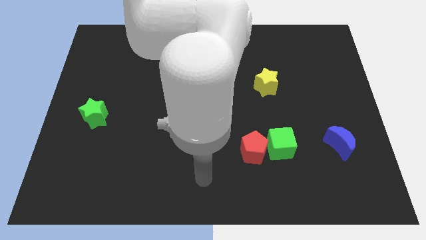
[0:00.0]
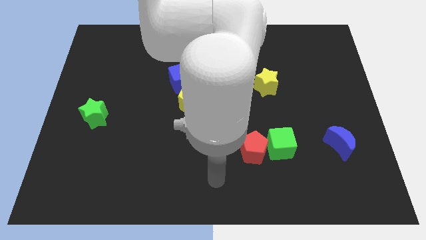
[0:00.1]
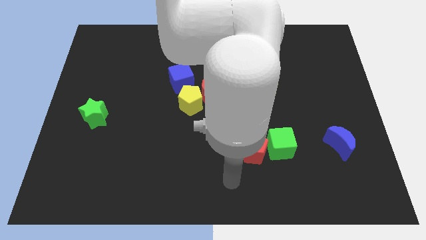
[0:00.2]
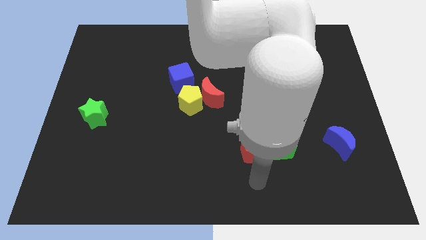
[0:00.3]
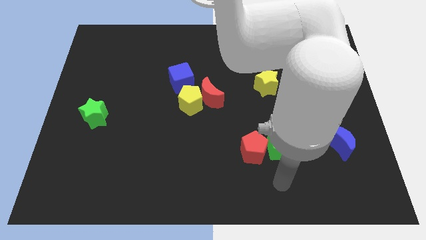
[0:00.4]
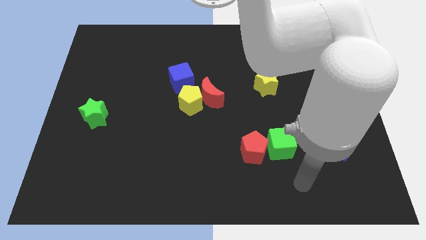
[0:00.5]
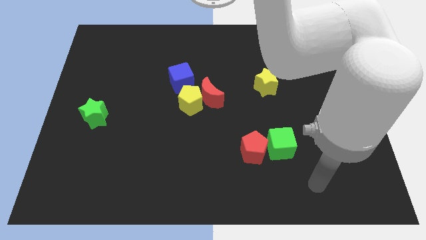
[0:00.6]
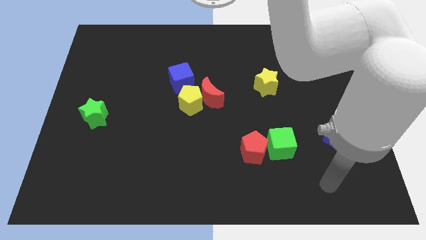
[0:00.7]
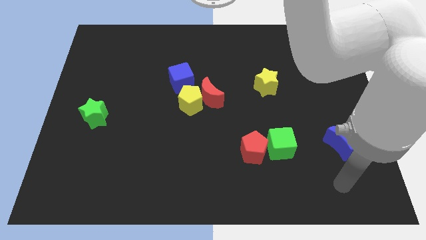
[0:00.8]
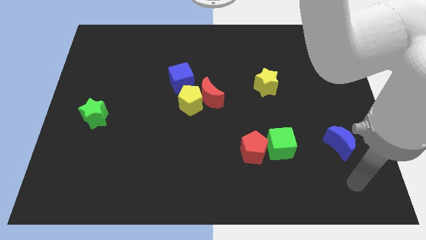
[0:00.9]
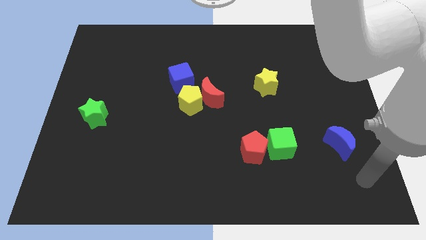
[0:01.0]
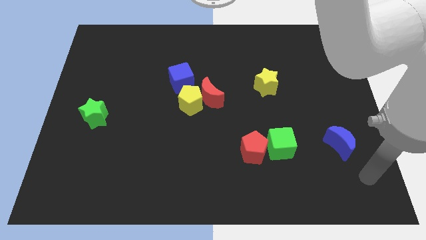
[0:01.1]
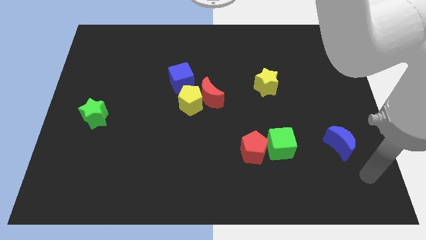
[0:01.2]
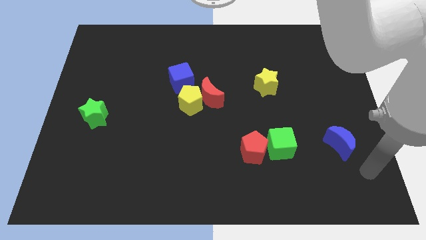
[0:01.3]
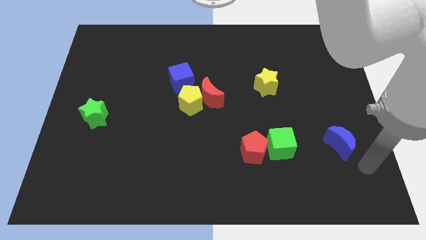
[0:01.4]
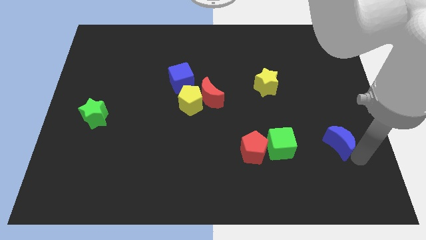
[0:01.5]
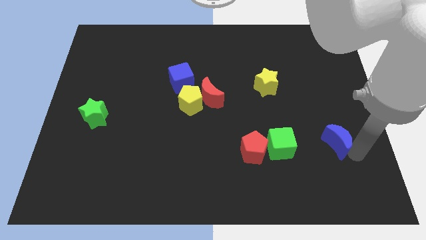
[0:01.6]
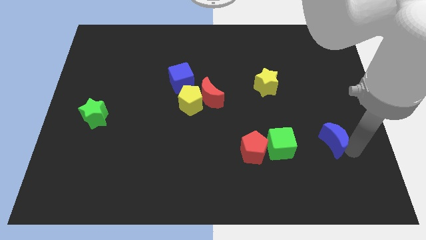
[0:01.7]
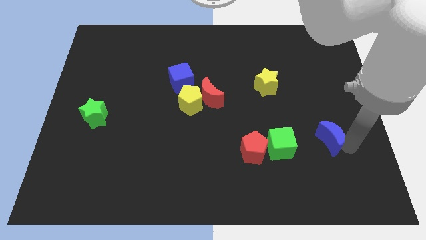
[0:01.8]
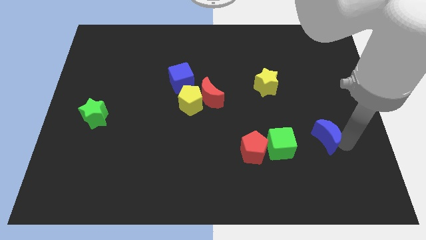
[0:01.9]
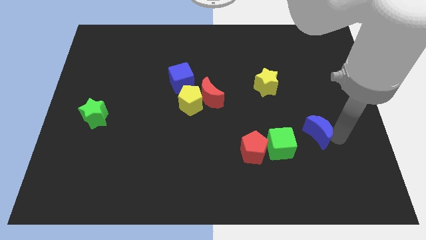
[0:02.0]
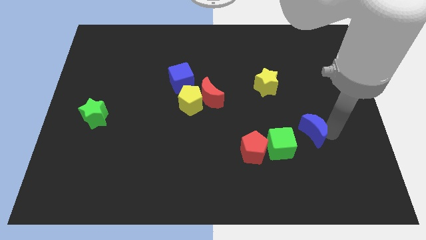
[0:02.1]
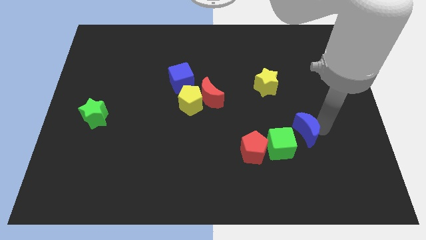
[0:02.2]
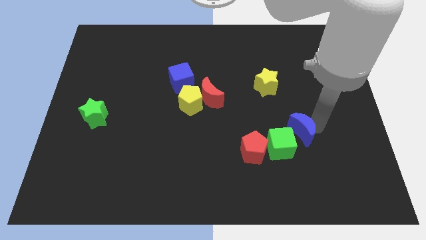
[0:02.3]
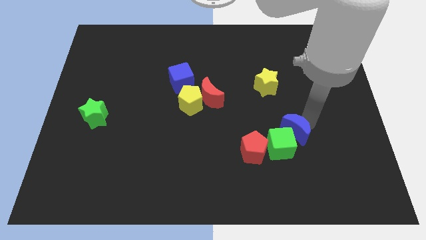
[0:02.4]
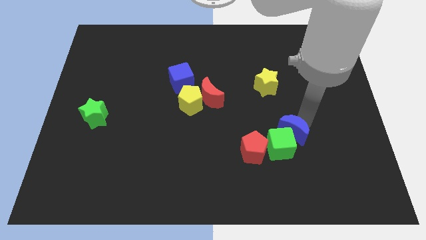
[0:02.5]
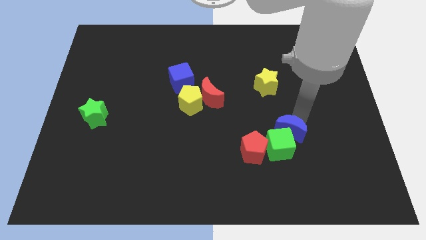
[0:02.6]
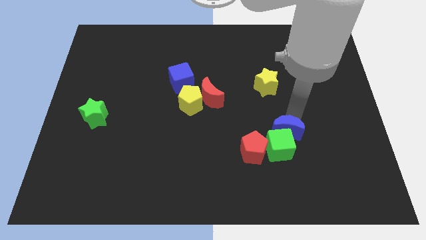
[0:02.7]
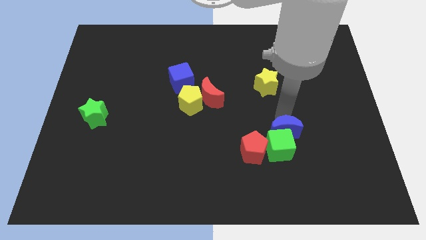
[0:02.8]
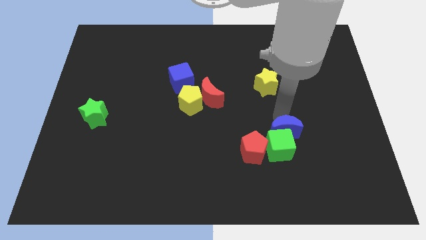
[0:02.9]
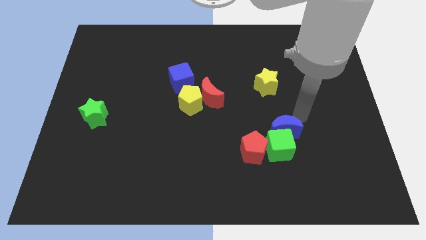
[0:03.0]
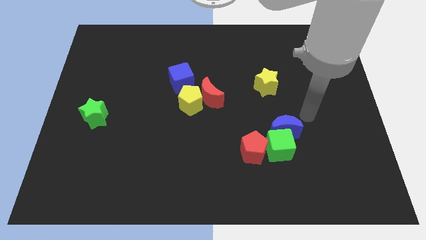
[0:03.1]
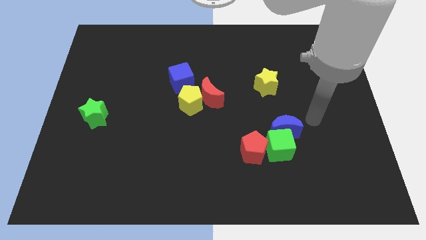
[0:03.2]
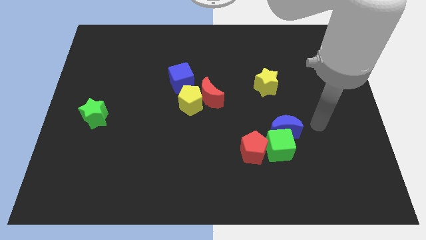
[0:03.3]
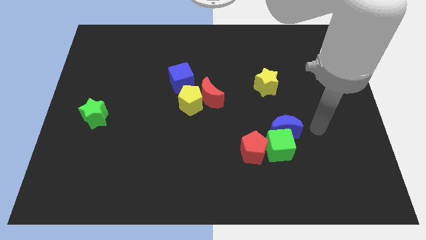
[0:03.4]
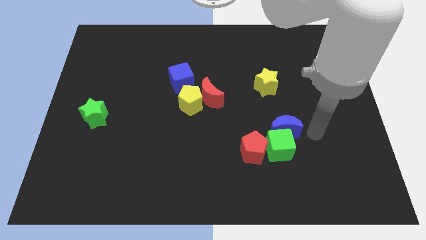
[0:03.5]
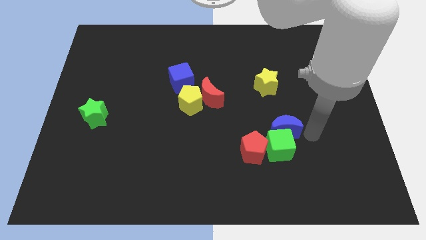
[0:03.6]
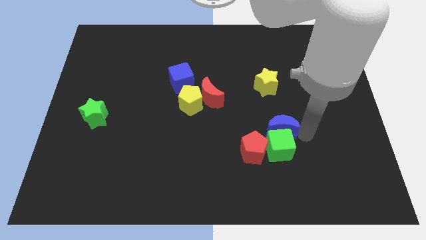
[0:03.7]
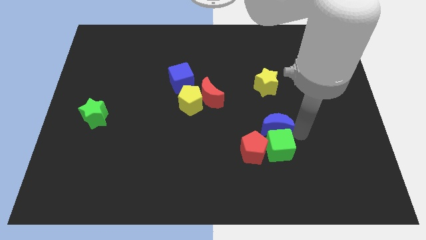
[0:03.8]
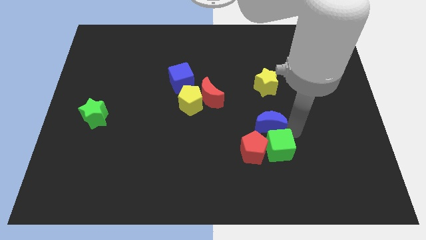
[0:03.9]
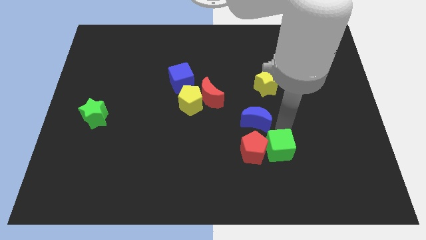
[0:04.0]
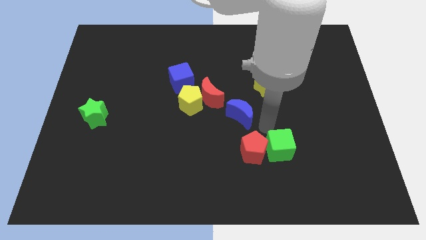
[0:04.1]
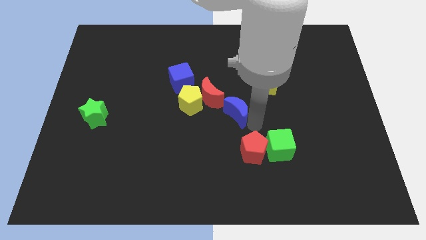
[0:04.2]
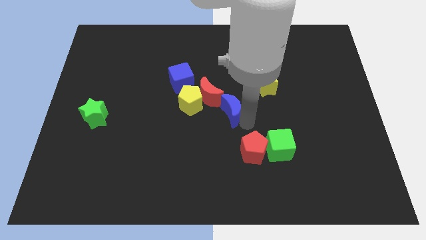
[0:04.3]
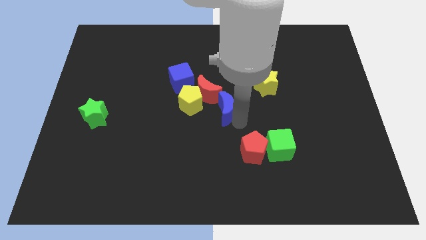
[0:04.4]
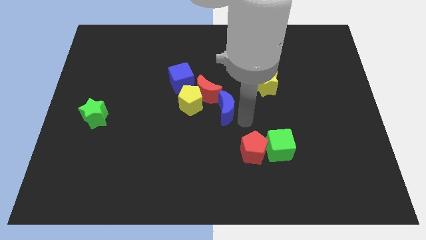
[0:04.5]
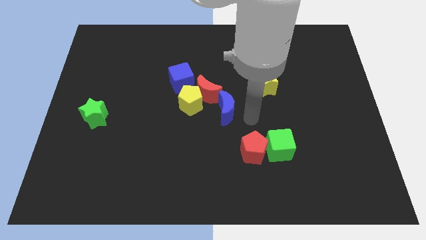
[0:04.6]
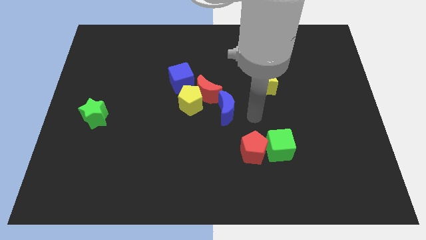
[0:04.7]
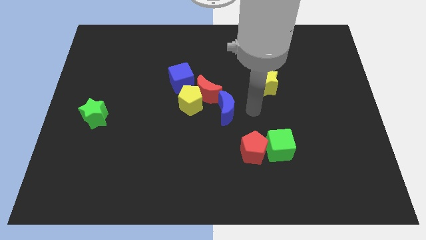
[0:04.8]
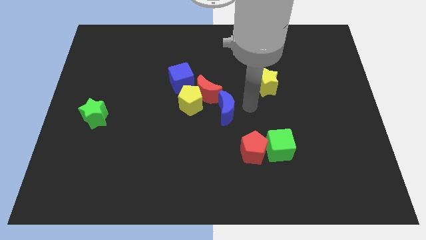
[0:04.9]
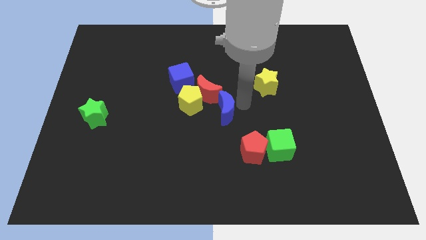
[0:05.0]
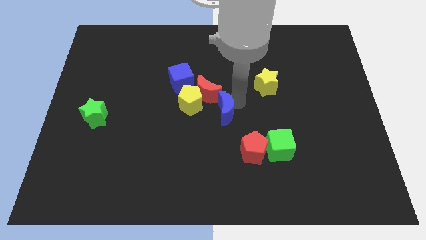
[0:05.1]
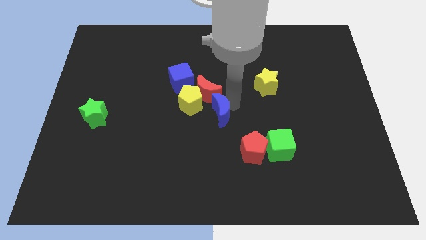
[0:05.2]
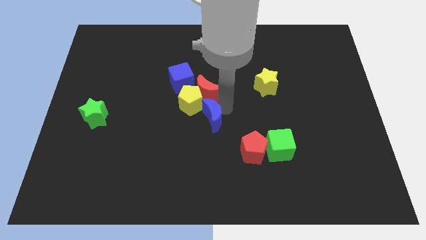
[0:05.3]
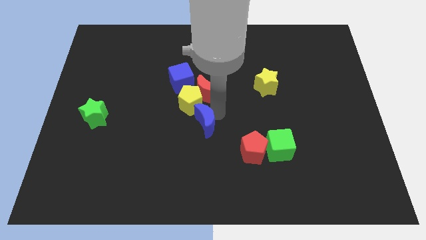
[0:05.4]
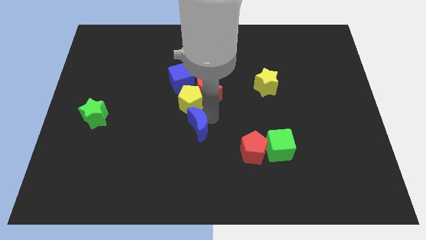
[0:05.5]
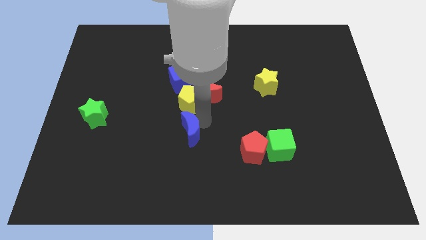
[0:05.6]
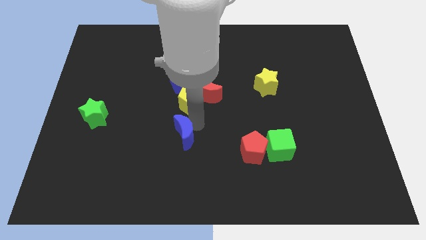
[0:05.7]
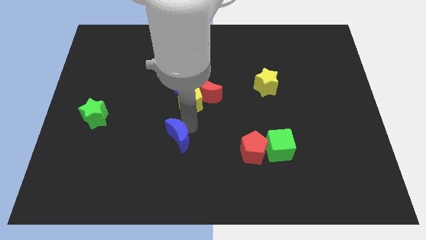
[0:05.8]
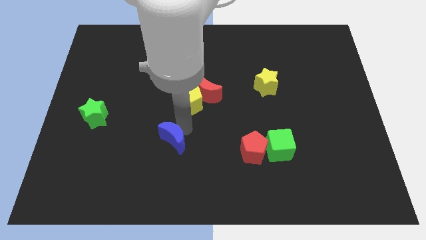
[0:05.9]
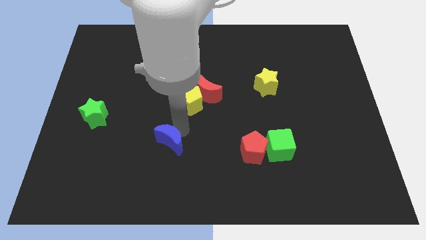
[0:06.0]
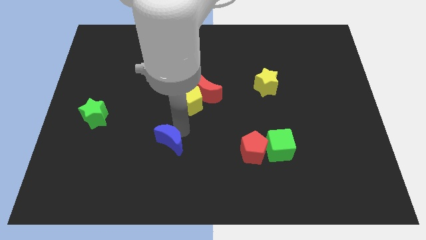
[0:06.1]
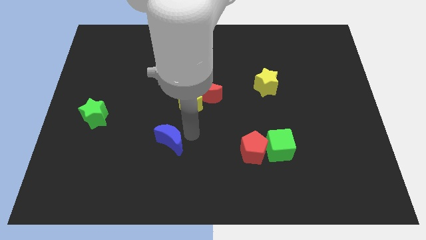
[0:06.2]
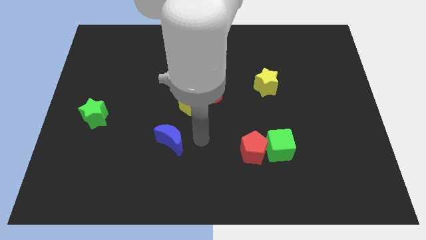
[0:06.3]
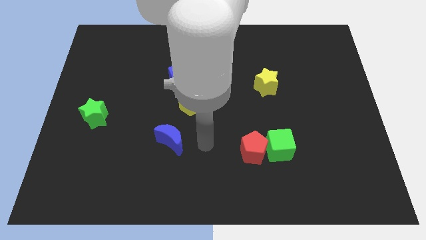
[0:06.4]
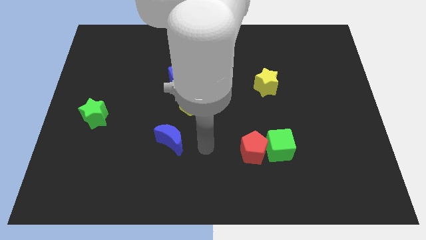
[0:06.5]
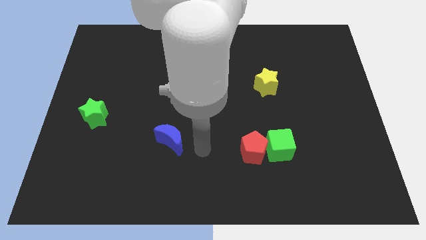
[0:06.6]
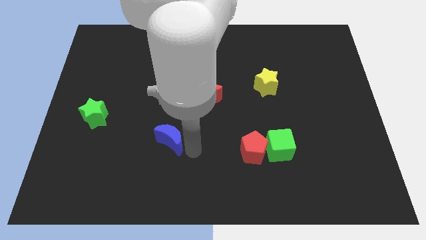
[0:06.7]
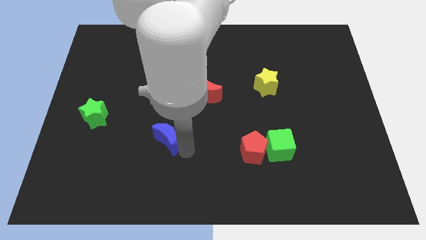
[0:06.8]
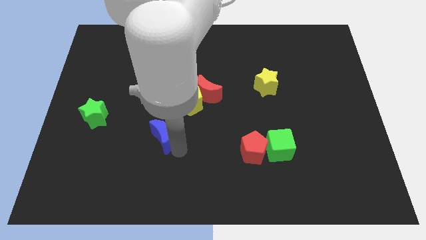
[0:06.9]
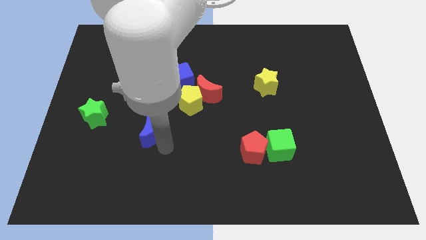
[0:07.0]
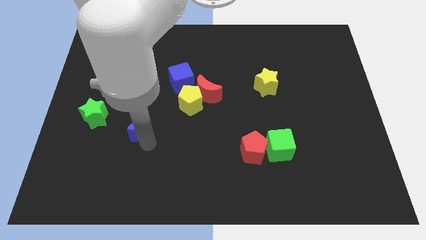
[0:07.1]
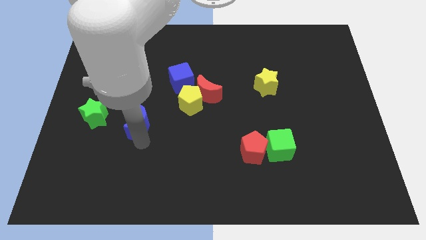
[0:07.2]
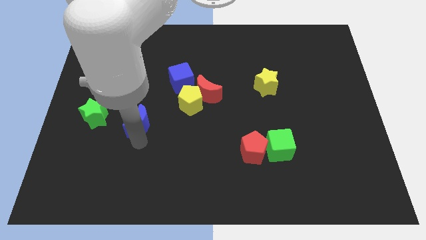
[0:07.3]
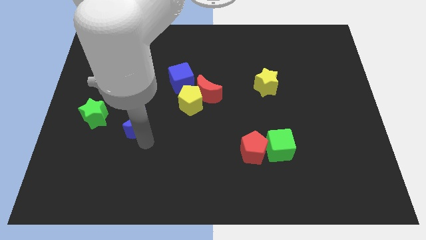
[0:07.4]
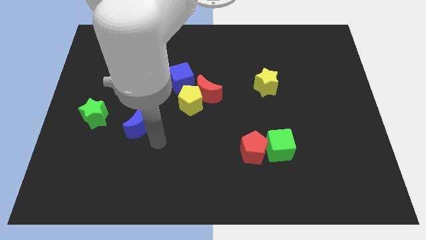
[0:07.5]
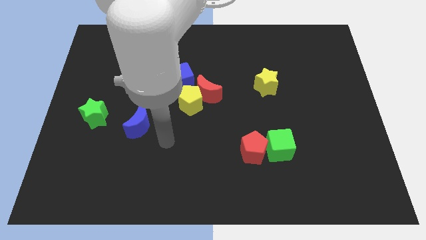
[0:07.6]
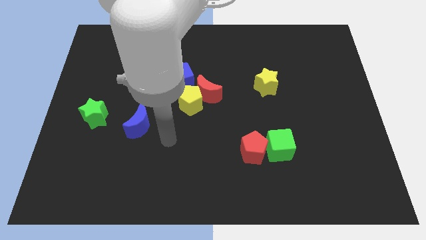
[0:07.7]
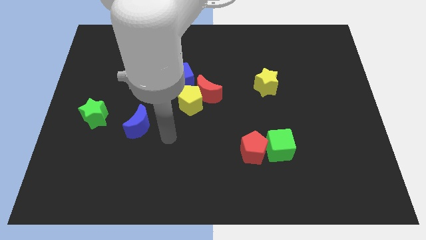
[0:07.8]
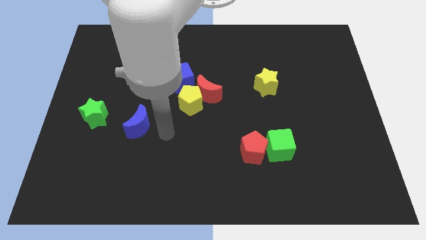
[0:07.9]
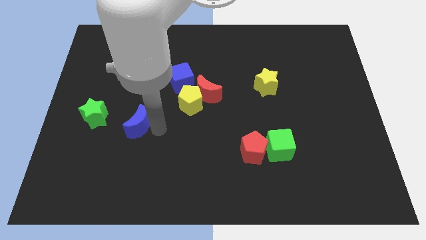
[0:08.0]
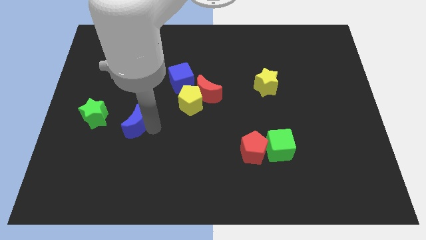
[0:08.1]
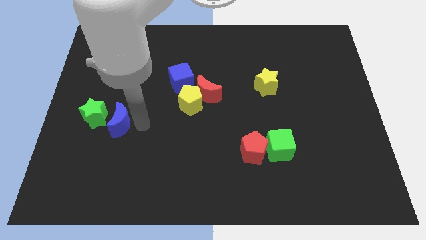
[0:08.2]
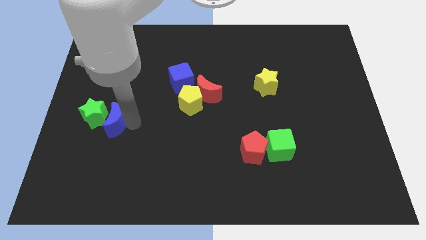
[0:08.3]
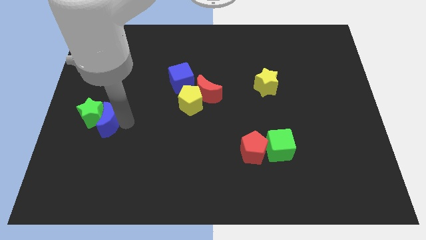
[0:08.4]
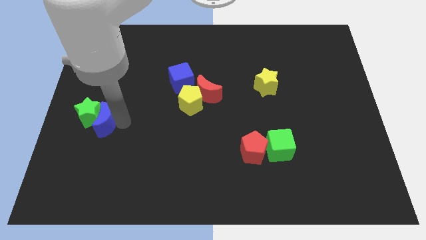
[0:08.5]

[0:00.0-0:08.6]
slide the blue moon close to the green star

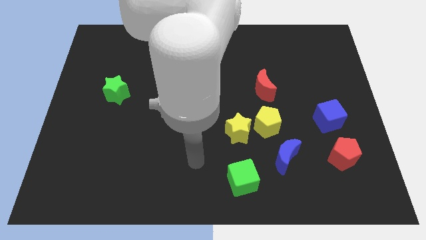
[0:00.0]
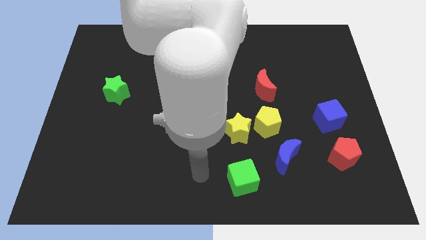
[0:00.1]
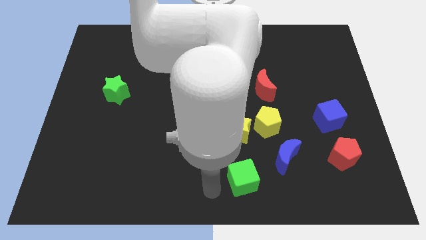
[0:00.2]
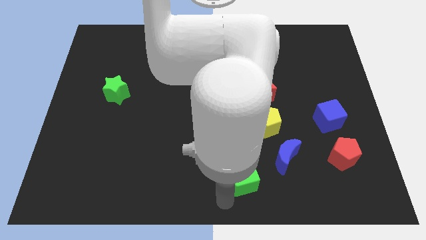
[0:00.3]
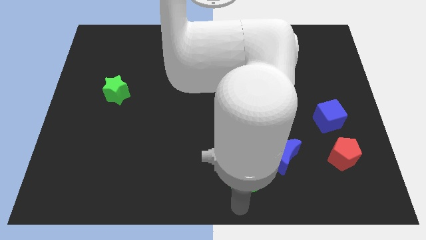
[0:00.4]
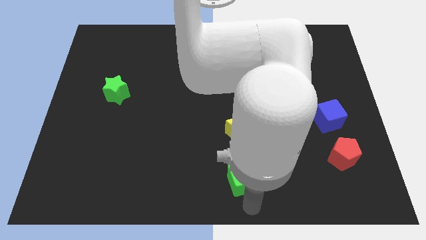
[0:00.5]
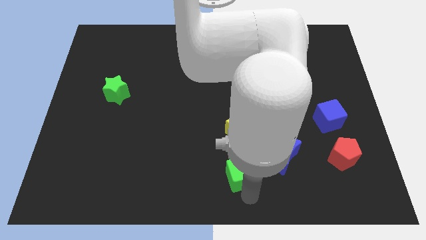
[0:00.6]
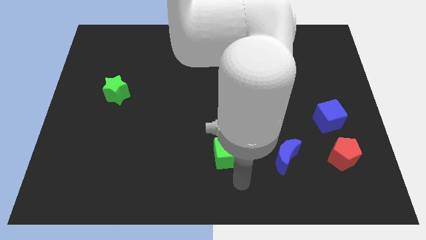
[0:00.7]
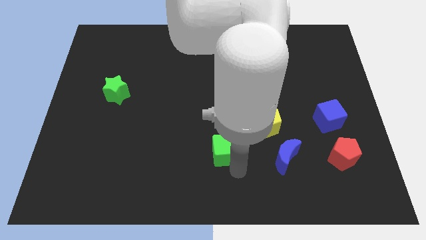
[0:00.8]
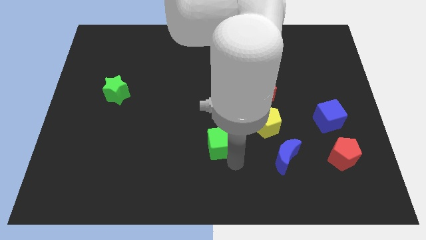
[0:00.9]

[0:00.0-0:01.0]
put the green cube next to the yellow star
